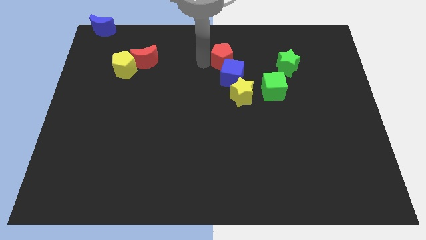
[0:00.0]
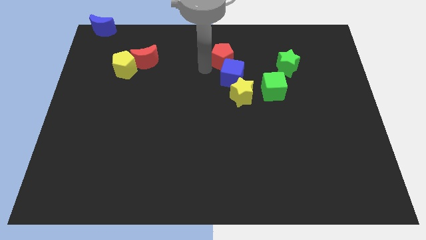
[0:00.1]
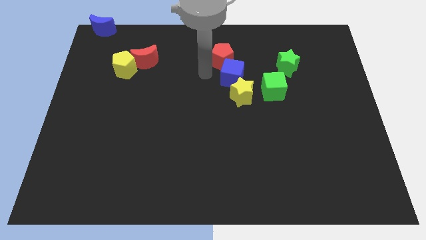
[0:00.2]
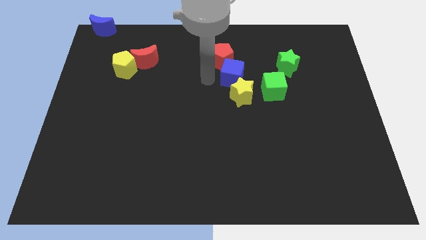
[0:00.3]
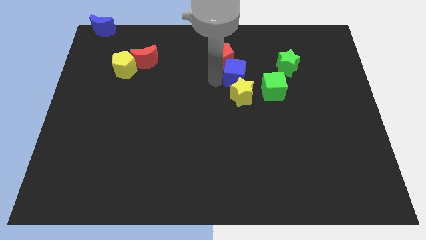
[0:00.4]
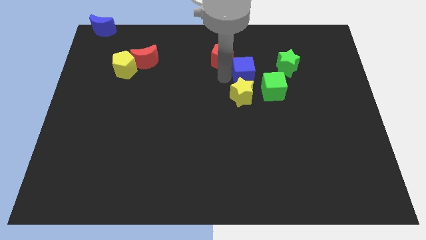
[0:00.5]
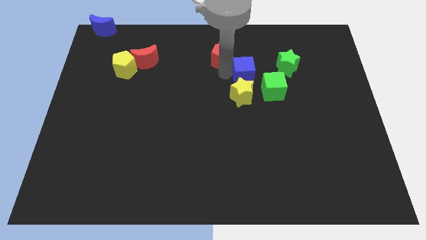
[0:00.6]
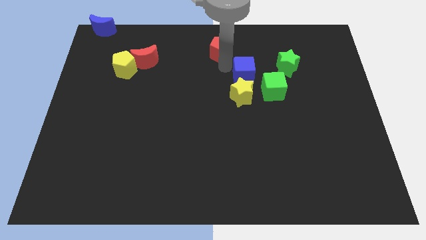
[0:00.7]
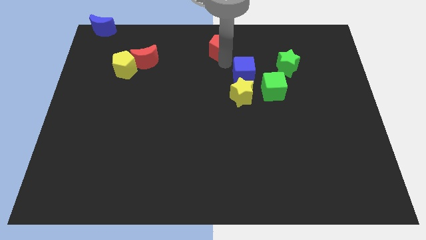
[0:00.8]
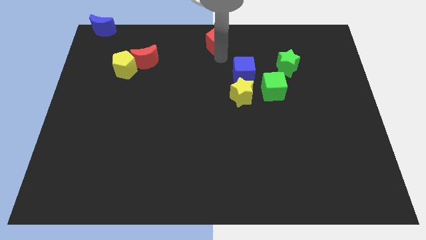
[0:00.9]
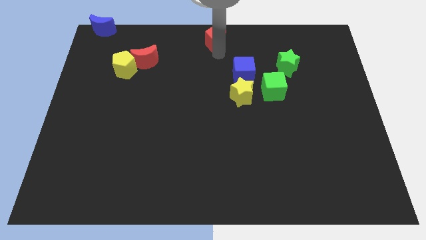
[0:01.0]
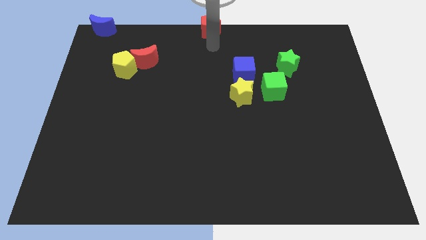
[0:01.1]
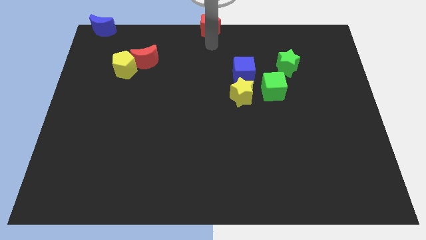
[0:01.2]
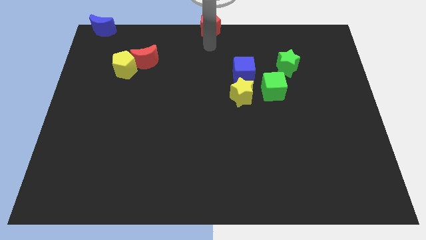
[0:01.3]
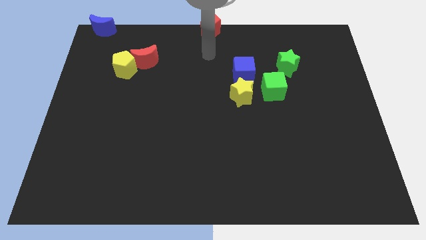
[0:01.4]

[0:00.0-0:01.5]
put the red pentagon at the top center of the board

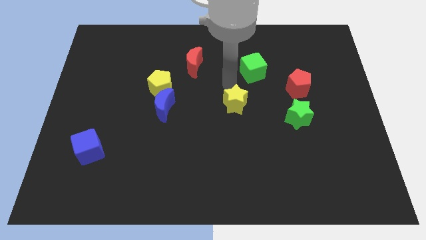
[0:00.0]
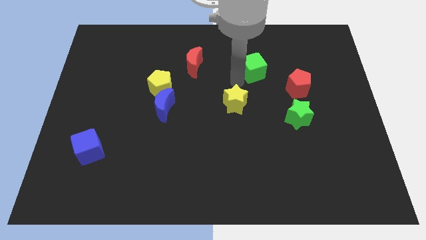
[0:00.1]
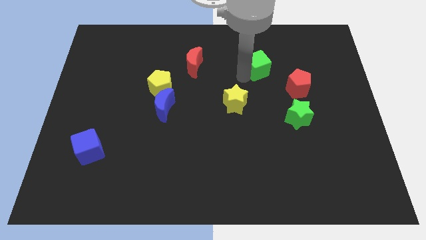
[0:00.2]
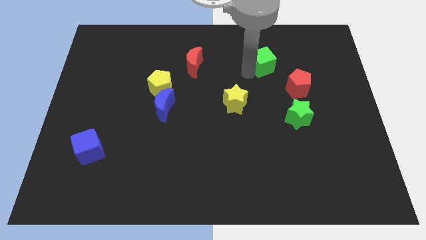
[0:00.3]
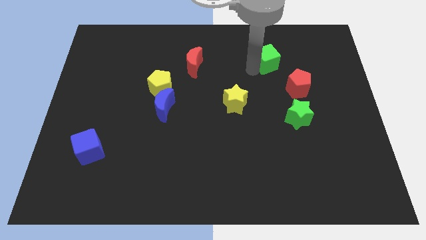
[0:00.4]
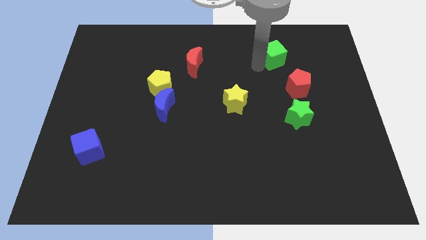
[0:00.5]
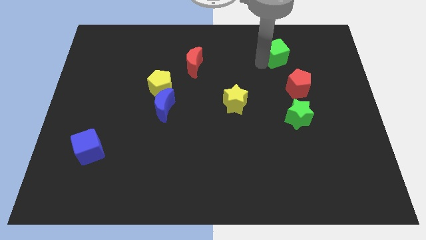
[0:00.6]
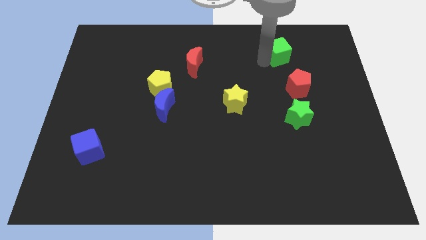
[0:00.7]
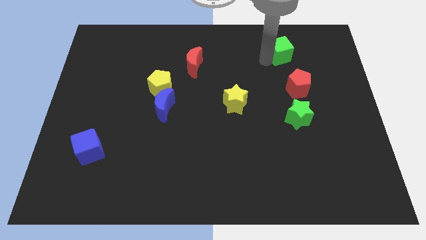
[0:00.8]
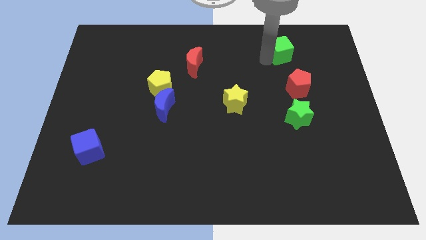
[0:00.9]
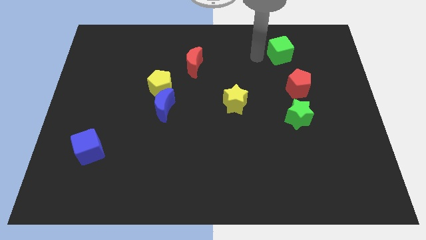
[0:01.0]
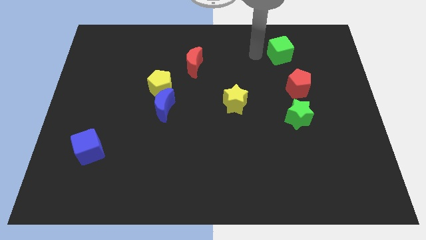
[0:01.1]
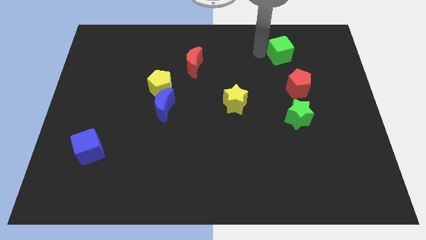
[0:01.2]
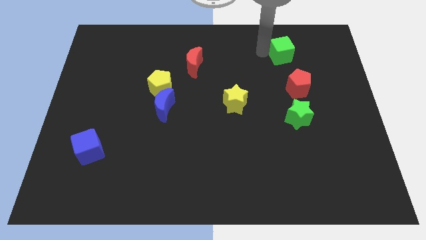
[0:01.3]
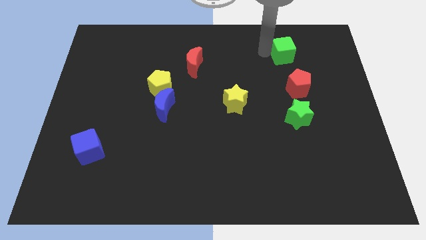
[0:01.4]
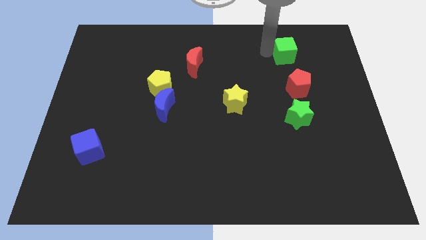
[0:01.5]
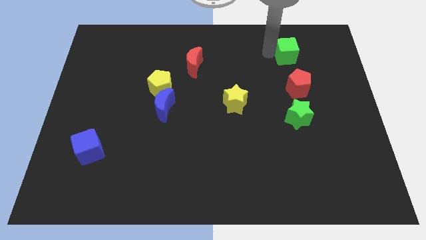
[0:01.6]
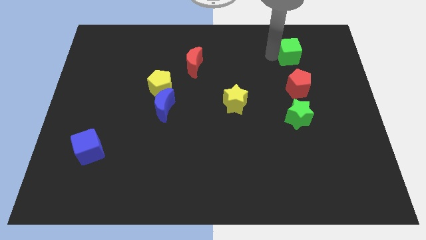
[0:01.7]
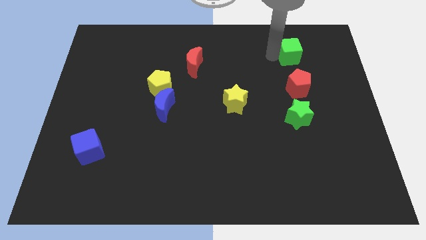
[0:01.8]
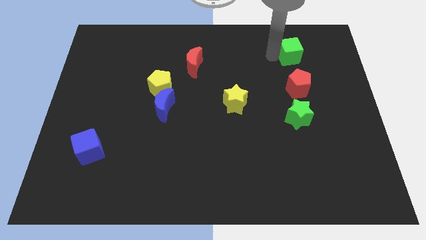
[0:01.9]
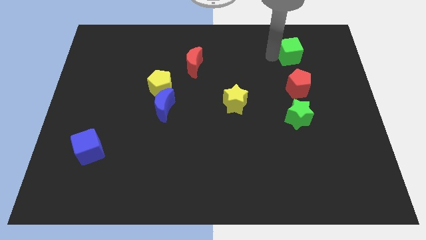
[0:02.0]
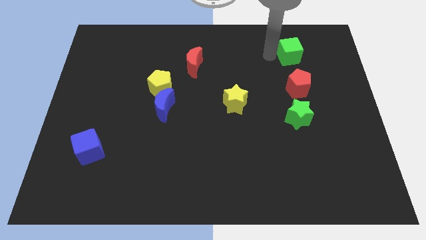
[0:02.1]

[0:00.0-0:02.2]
put the green cube above the red pentagon

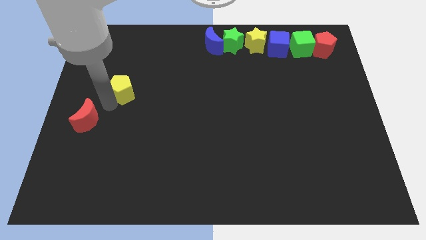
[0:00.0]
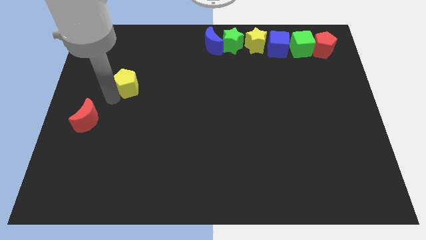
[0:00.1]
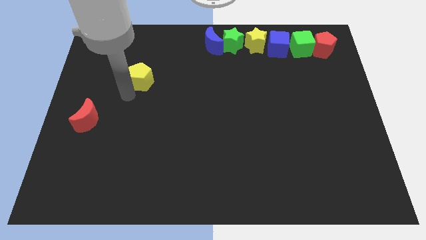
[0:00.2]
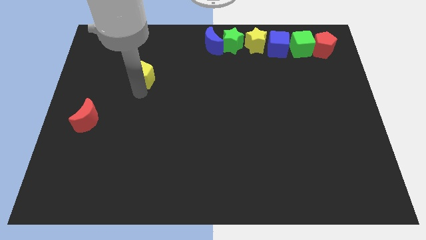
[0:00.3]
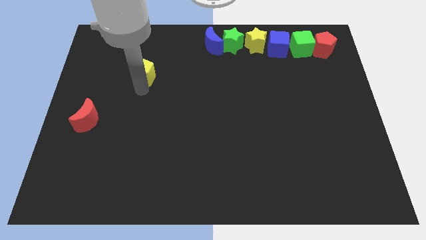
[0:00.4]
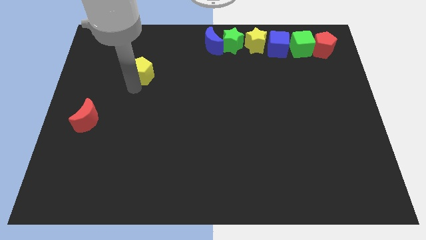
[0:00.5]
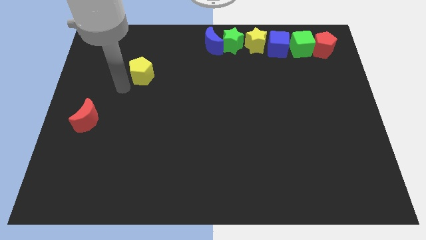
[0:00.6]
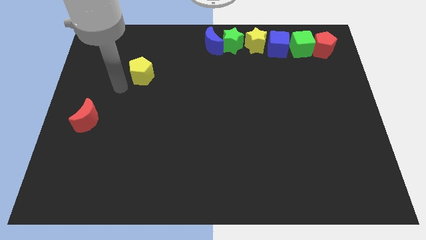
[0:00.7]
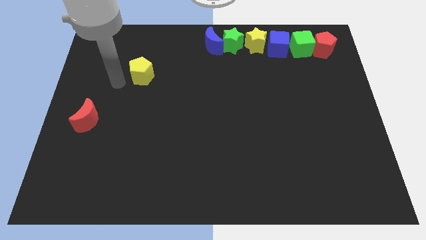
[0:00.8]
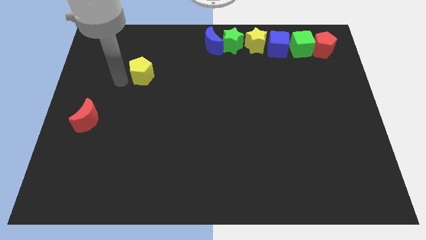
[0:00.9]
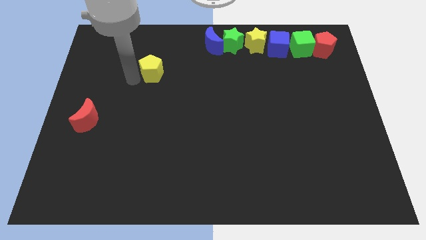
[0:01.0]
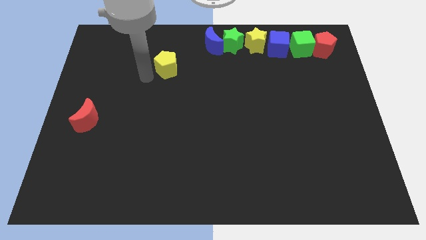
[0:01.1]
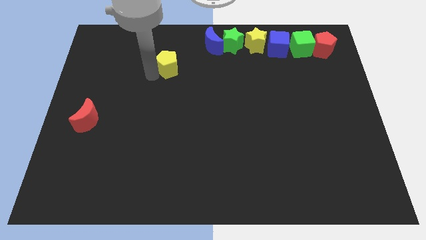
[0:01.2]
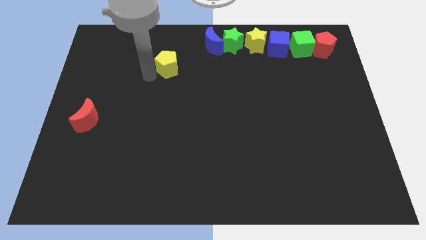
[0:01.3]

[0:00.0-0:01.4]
put the yellow pentagon diagonally in between the blue moon and red moon

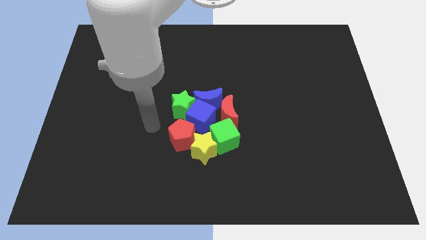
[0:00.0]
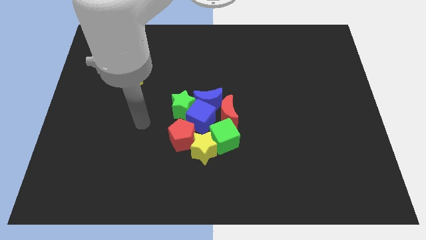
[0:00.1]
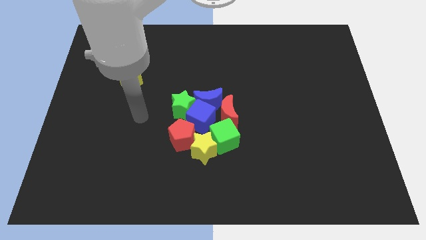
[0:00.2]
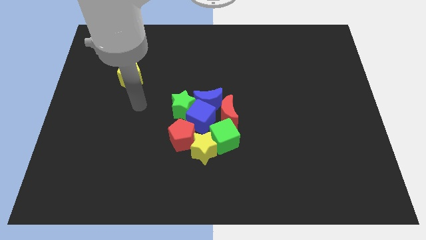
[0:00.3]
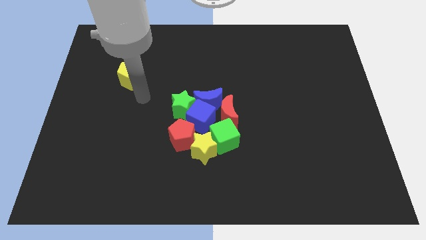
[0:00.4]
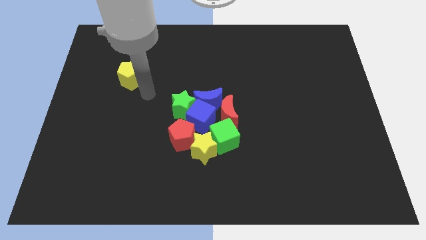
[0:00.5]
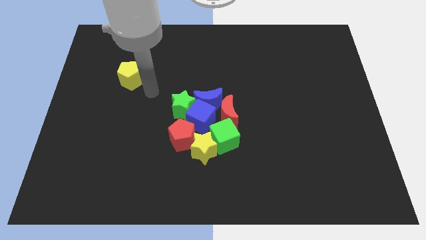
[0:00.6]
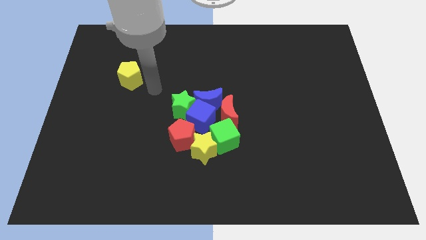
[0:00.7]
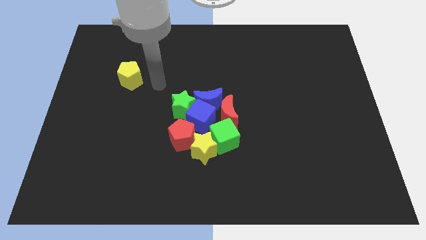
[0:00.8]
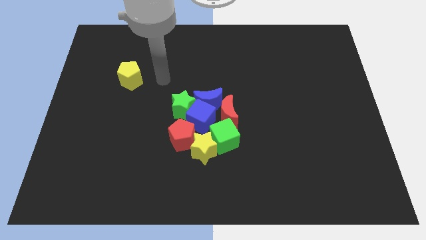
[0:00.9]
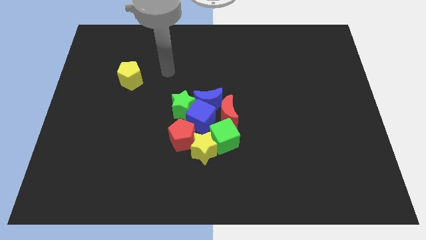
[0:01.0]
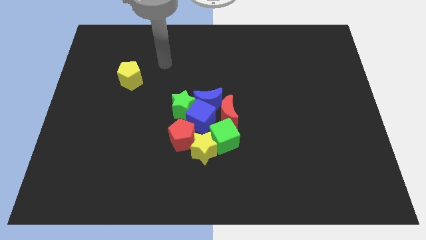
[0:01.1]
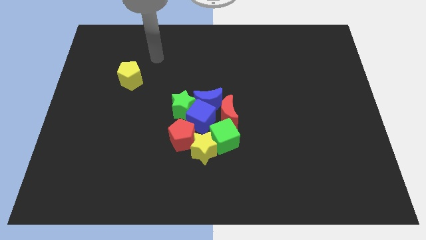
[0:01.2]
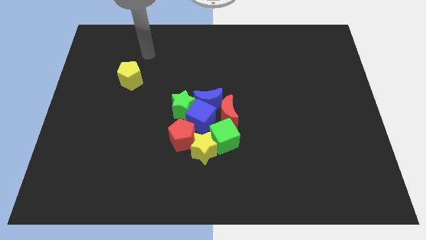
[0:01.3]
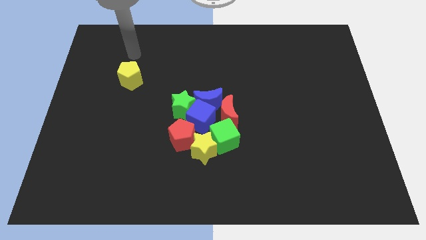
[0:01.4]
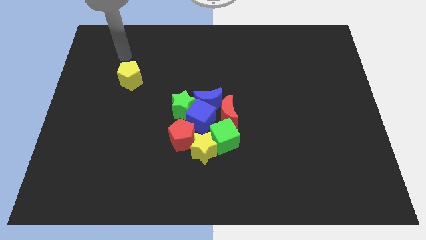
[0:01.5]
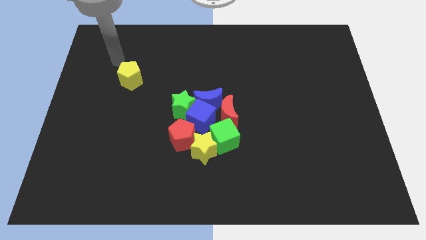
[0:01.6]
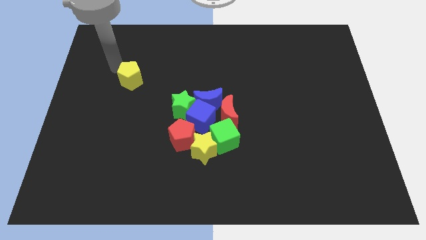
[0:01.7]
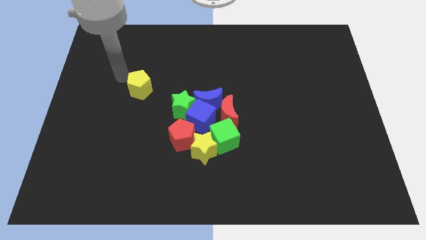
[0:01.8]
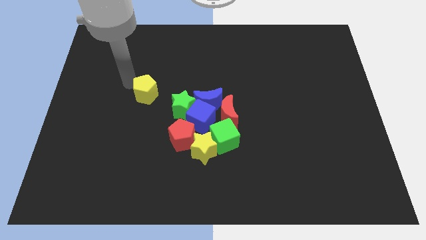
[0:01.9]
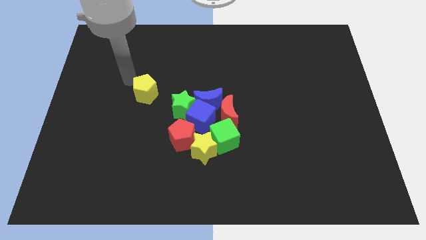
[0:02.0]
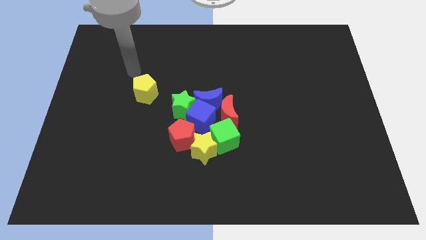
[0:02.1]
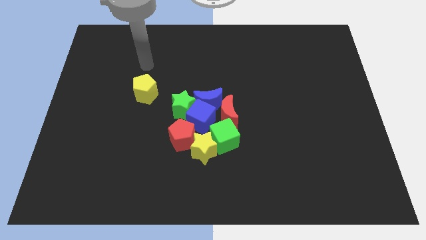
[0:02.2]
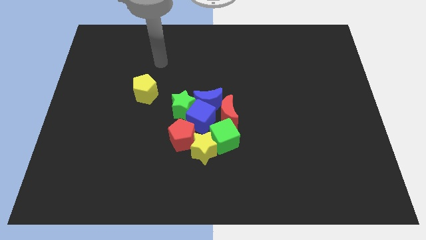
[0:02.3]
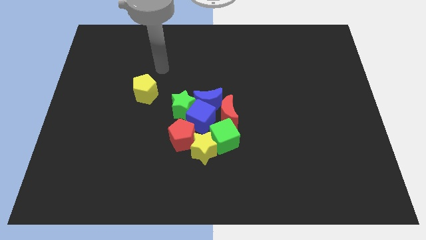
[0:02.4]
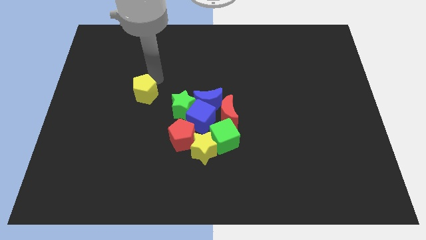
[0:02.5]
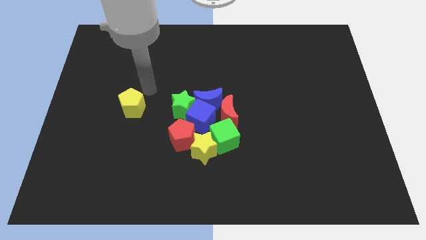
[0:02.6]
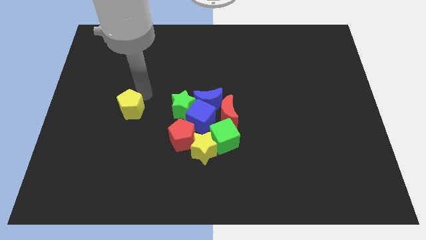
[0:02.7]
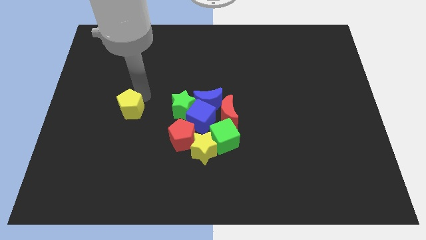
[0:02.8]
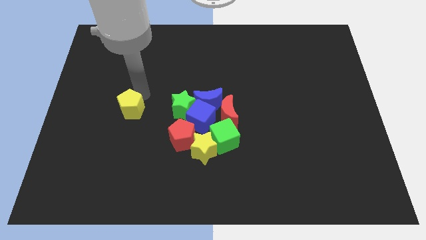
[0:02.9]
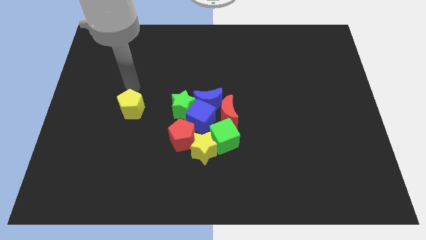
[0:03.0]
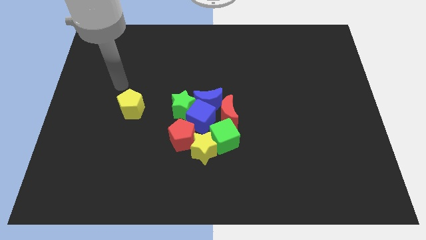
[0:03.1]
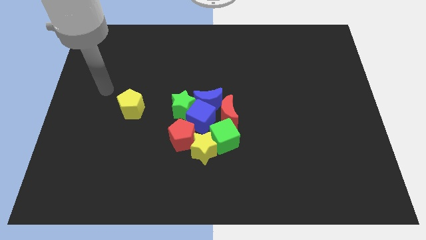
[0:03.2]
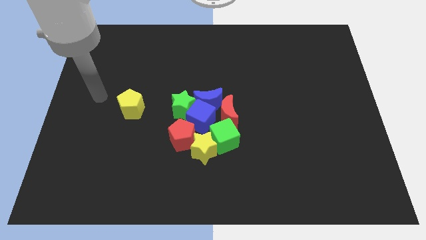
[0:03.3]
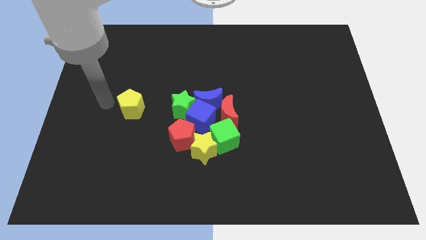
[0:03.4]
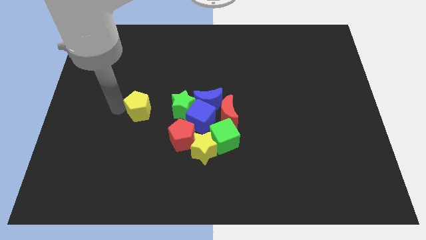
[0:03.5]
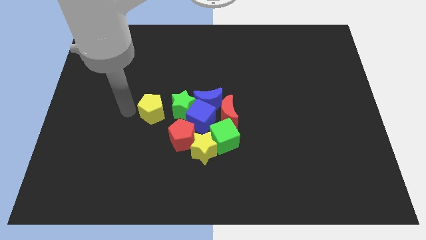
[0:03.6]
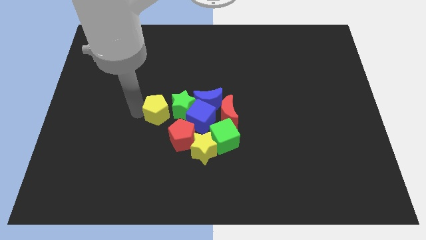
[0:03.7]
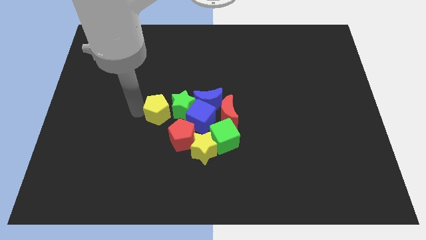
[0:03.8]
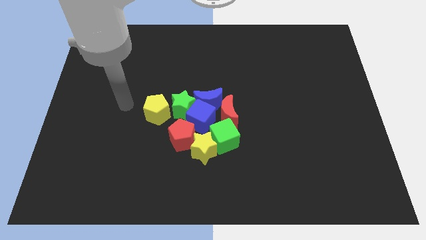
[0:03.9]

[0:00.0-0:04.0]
push the yellow pentagon towards the center
